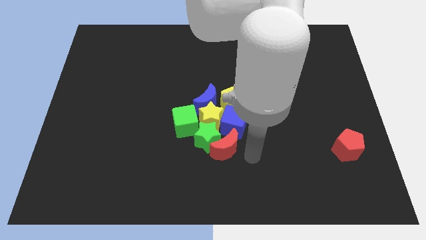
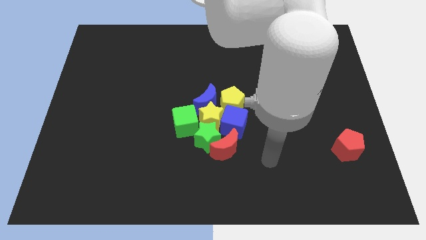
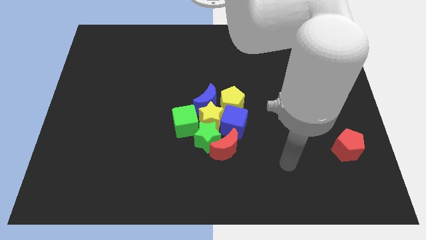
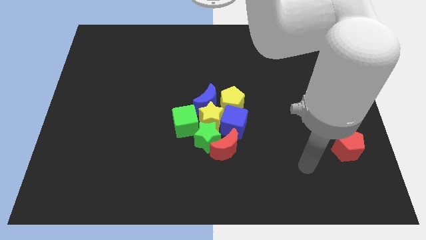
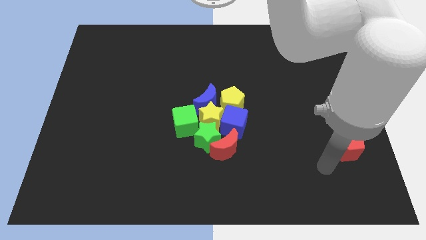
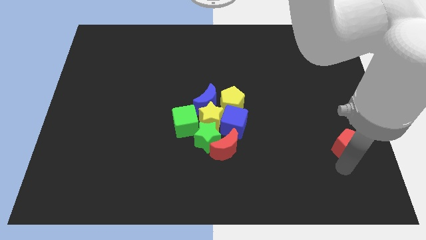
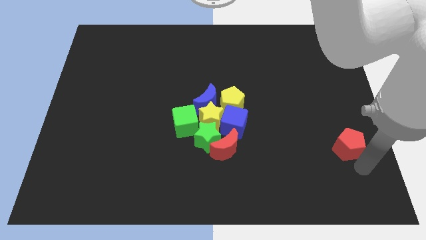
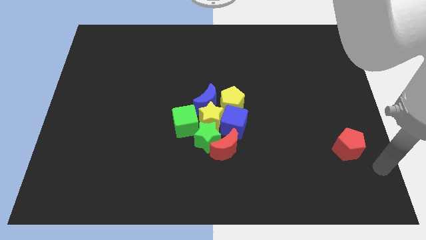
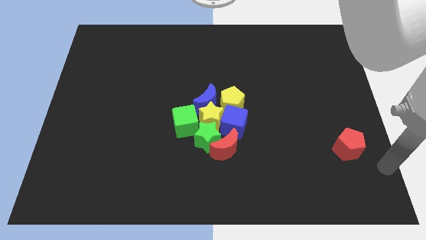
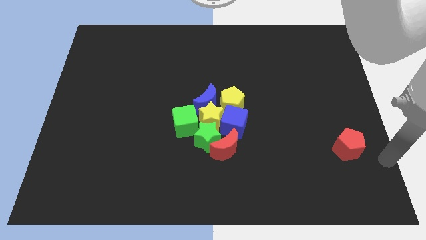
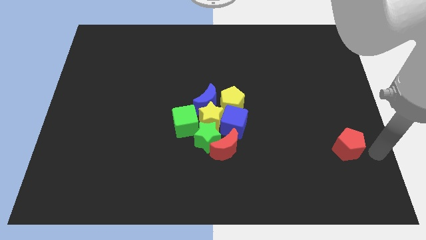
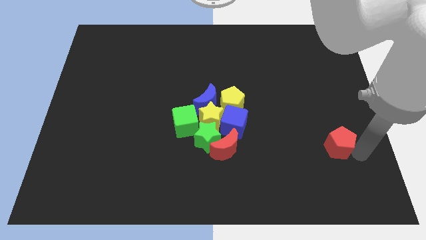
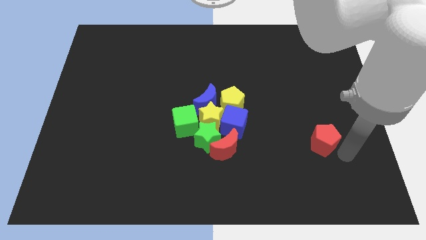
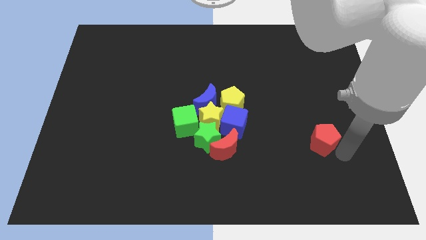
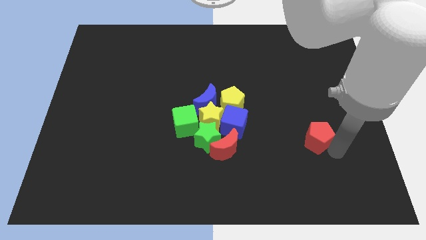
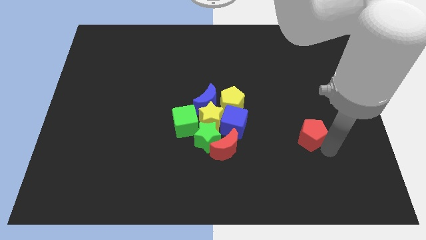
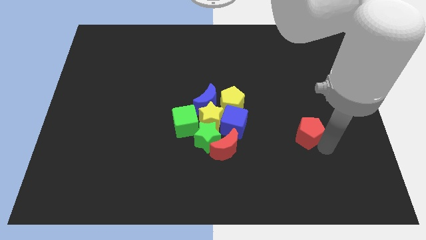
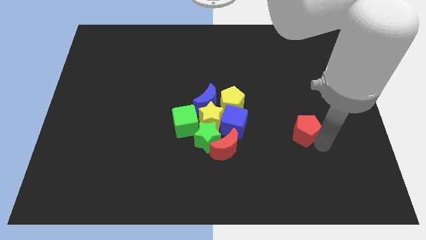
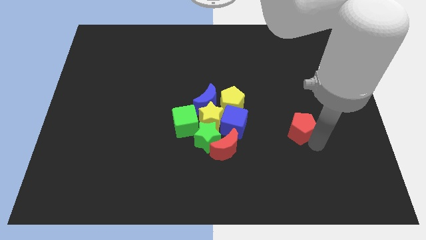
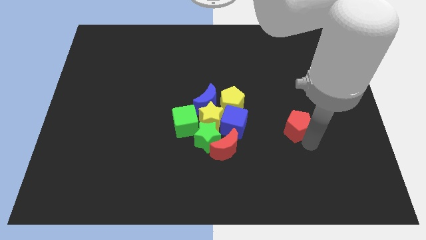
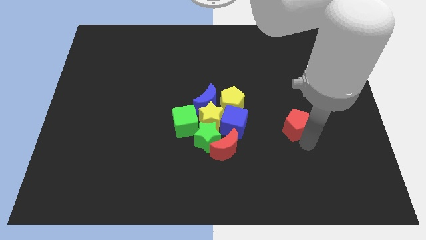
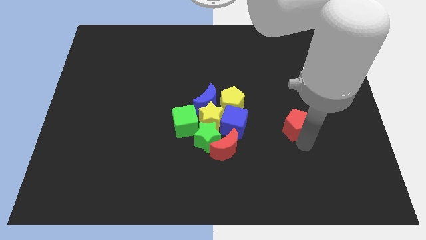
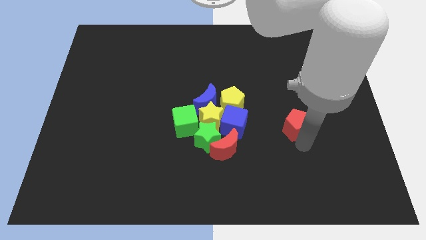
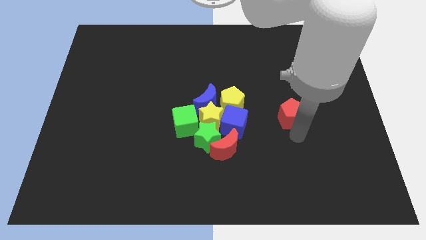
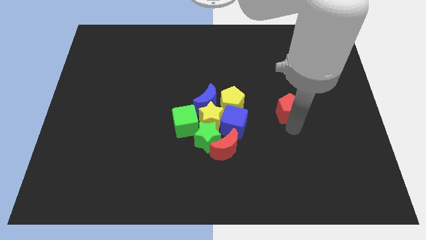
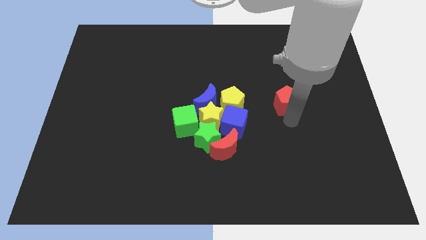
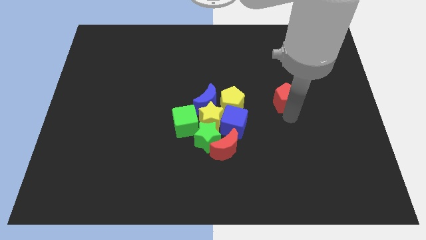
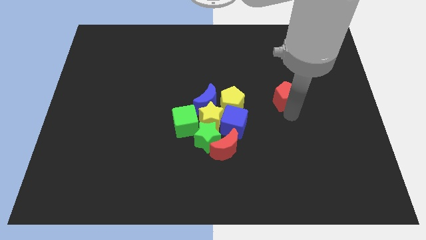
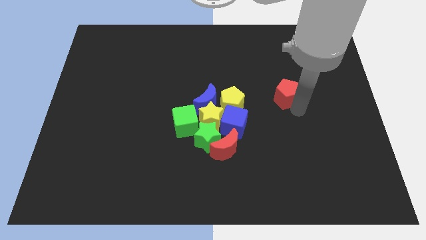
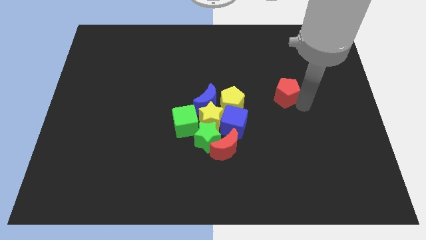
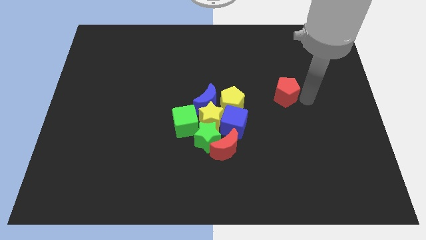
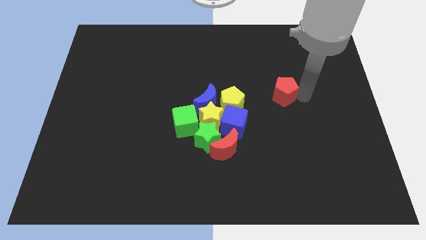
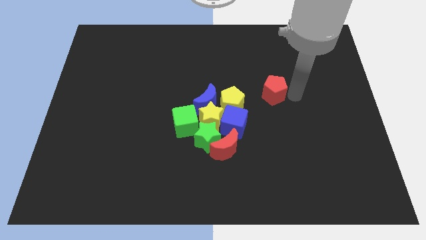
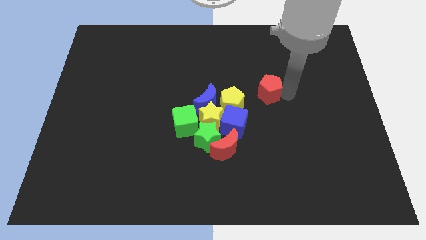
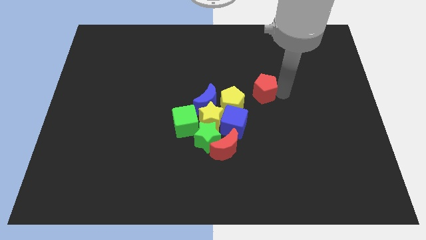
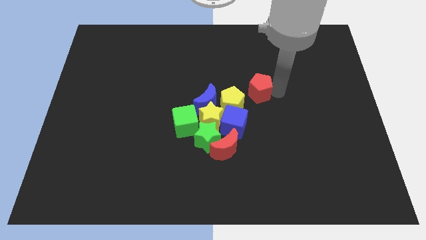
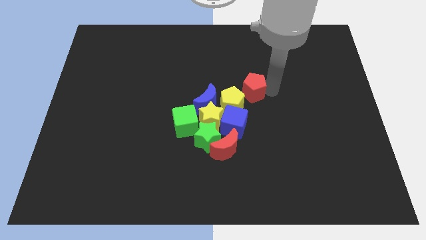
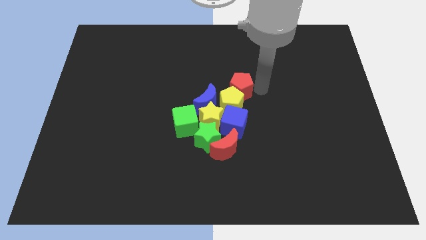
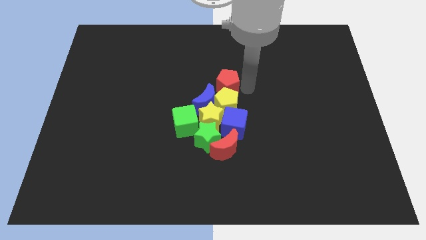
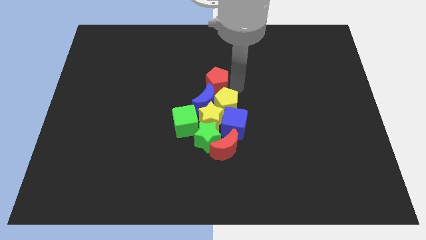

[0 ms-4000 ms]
place the red pentagon above the blue crescent

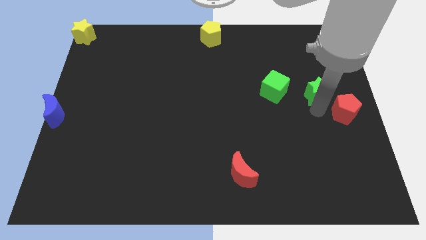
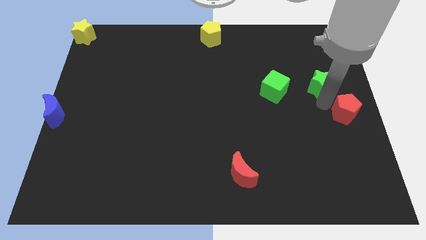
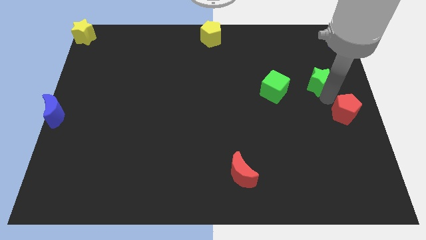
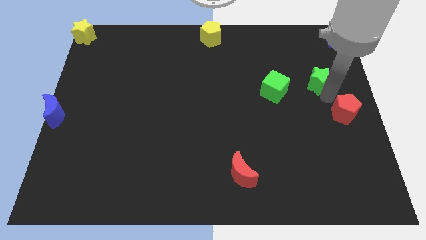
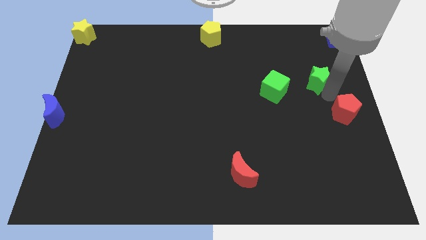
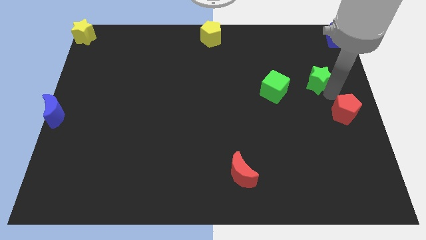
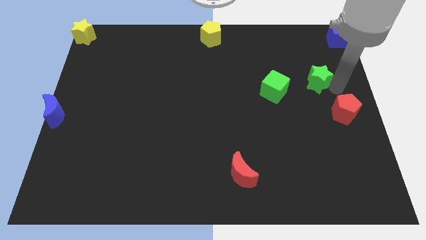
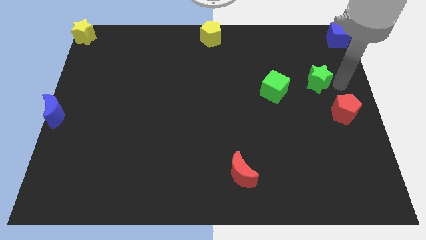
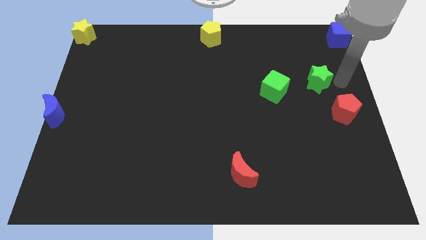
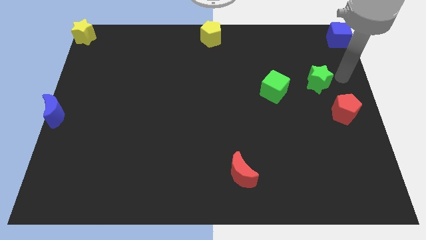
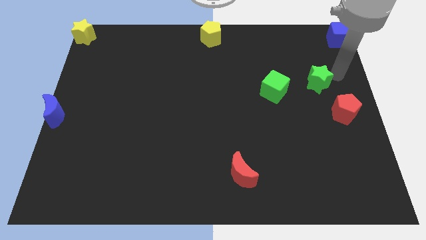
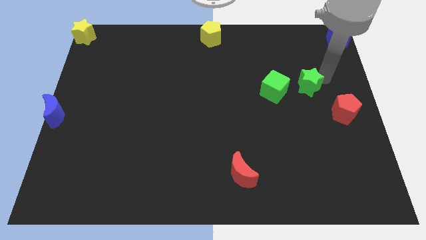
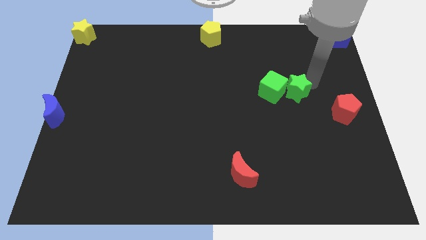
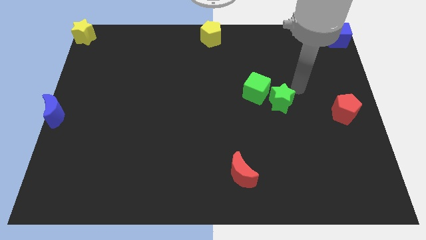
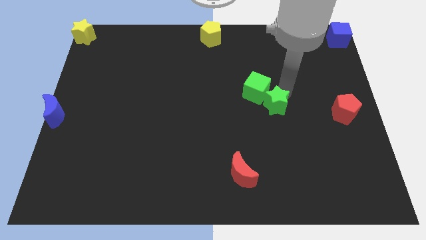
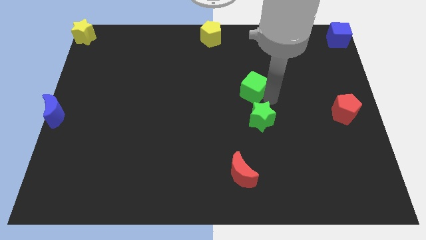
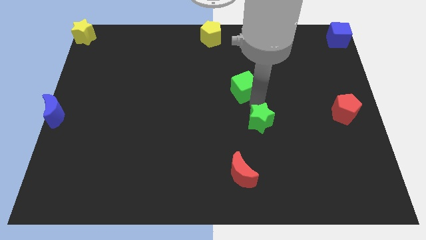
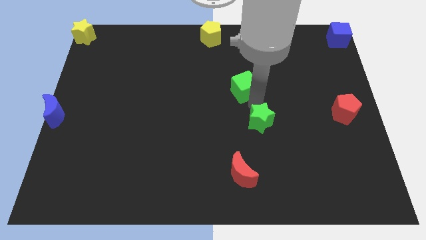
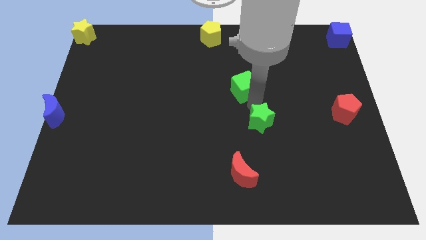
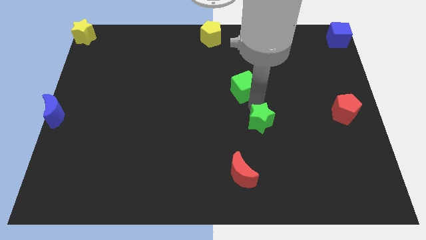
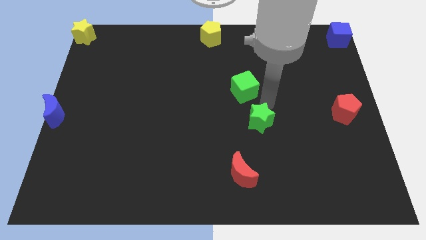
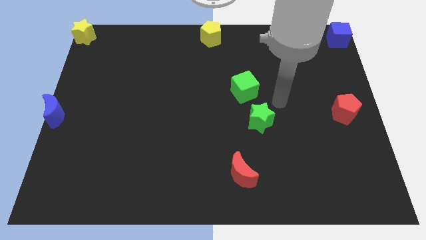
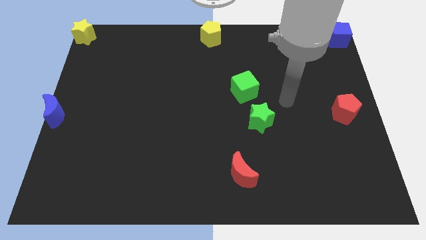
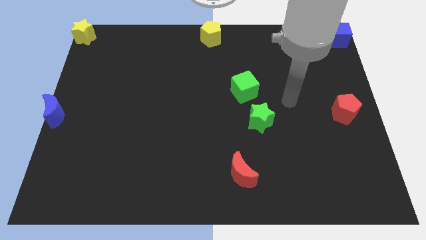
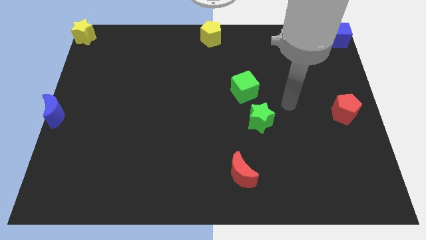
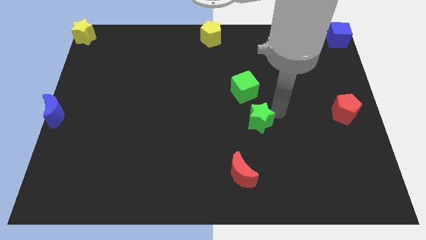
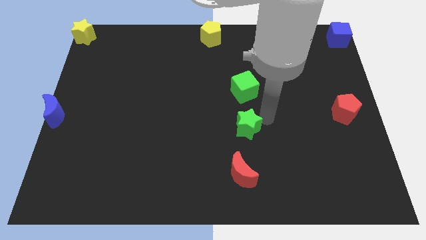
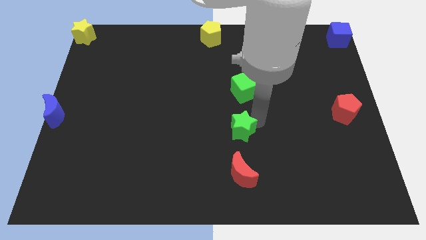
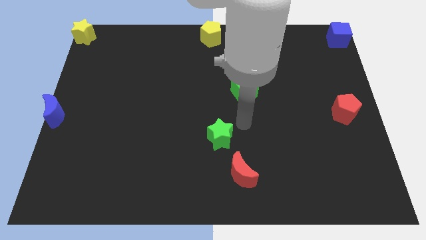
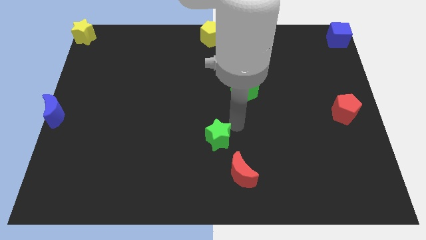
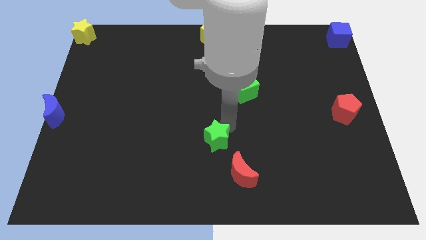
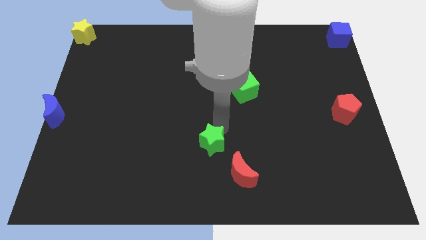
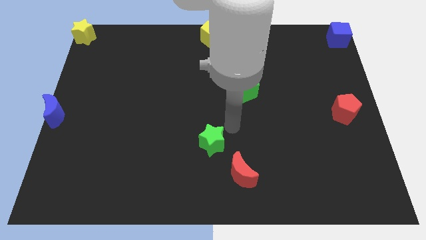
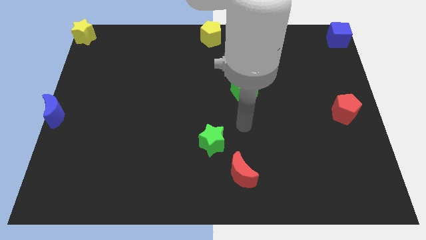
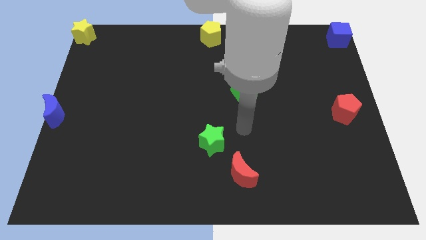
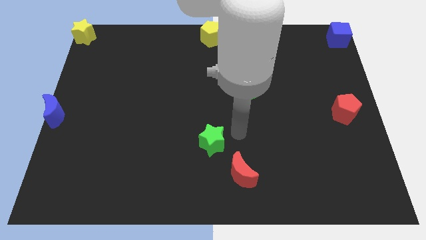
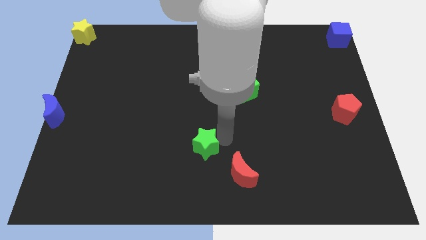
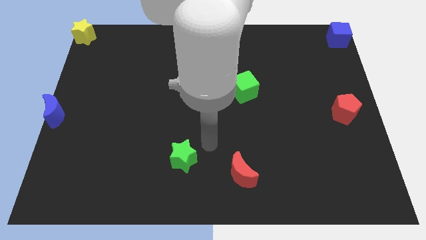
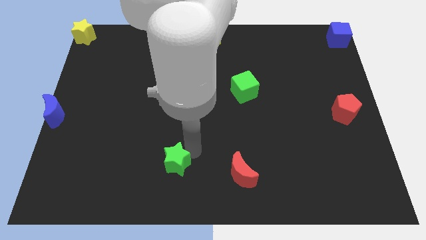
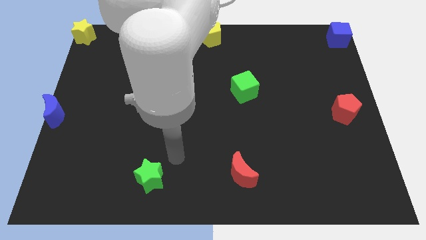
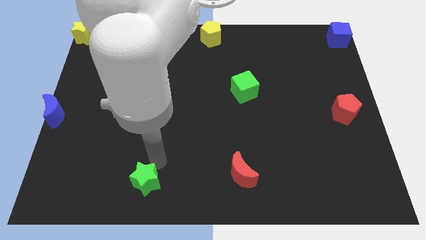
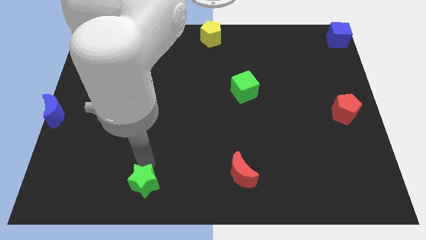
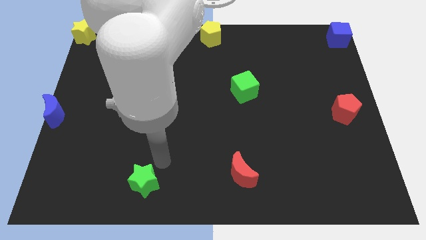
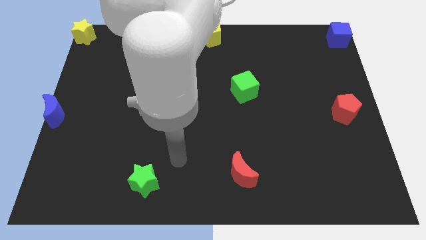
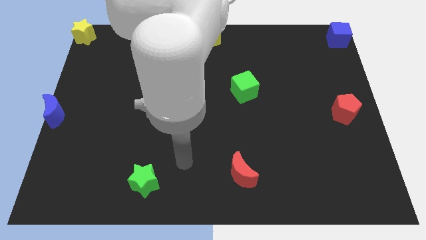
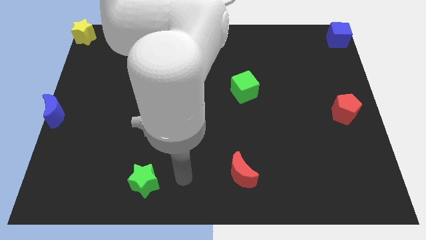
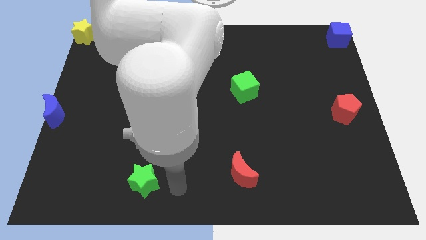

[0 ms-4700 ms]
push the green star to the bottom center

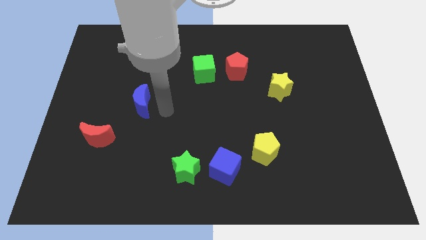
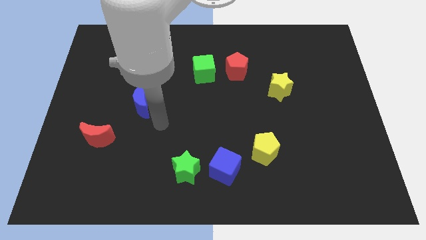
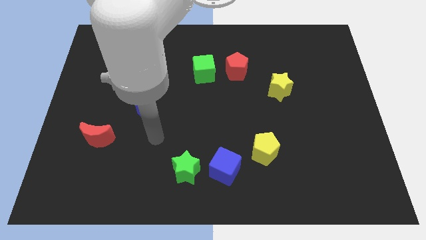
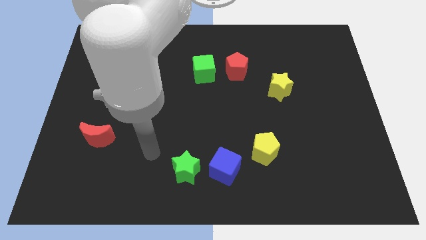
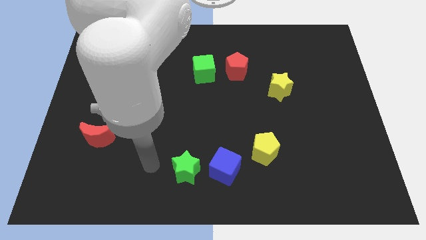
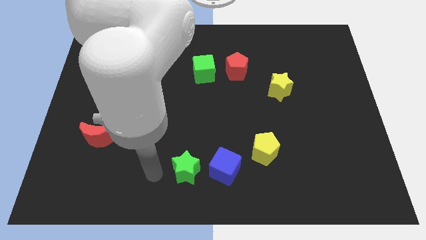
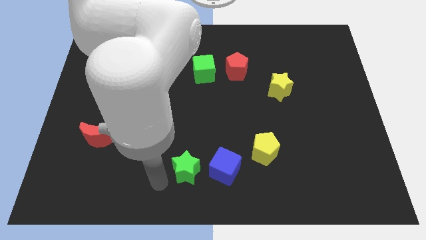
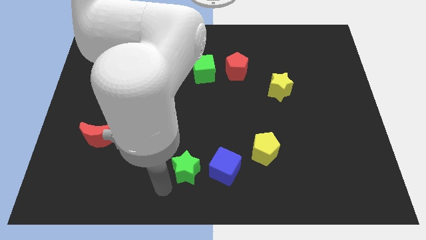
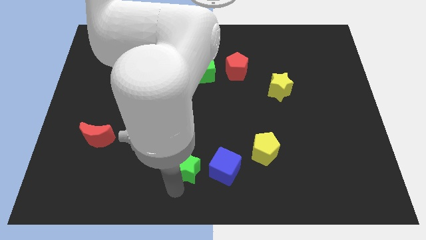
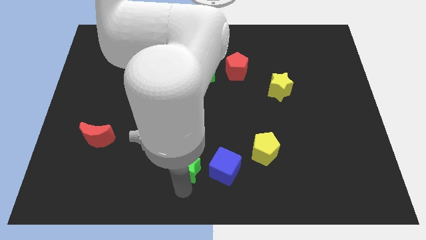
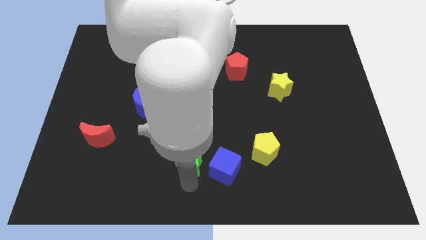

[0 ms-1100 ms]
touch the bottom of green star
